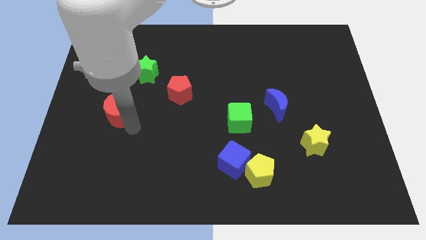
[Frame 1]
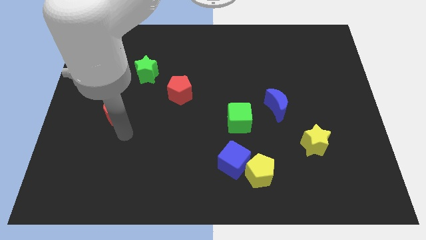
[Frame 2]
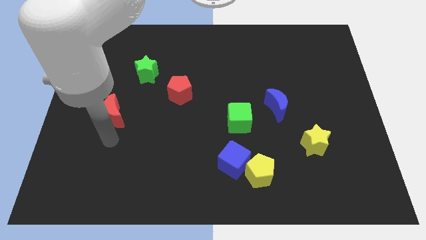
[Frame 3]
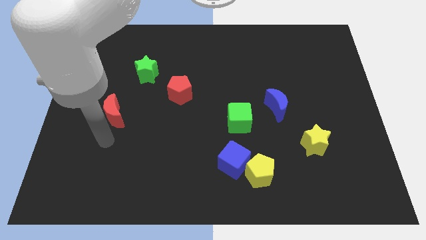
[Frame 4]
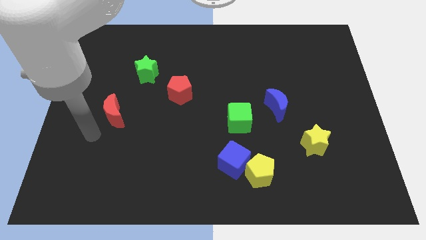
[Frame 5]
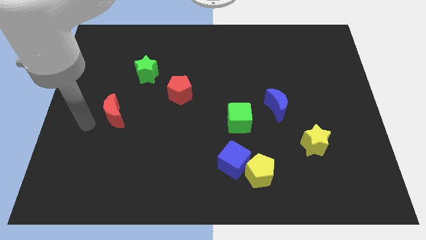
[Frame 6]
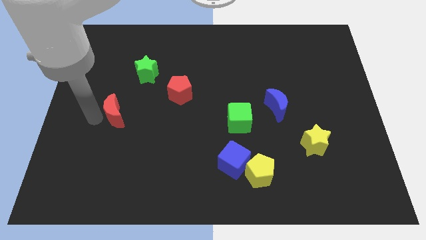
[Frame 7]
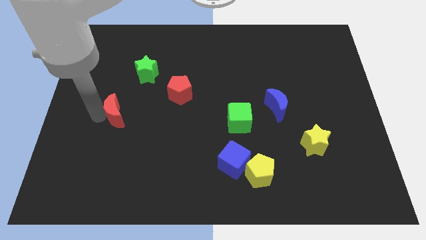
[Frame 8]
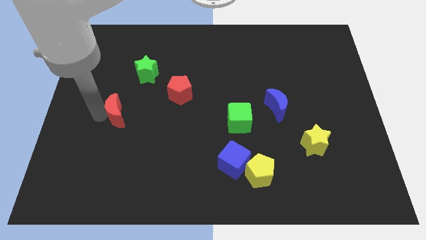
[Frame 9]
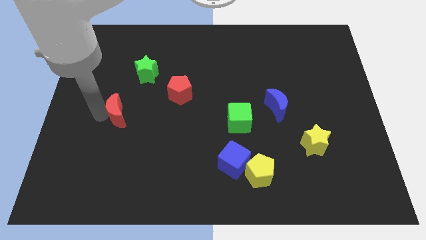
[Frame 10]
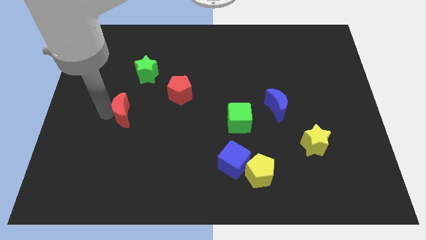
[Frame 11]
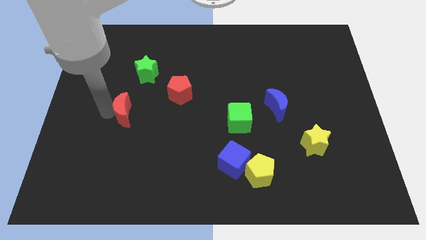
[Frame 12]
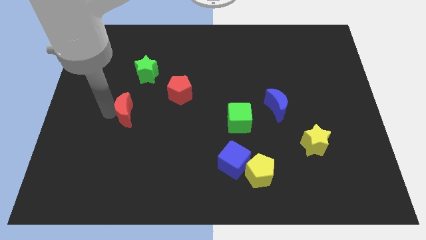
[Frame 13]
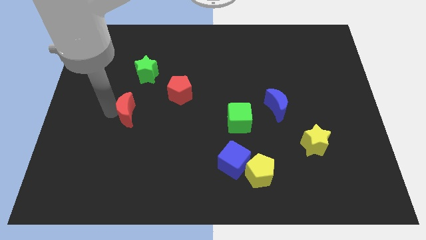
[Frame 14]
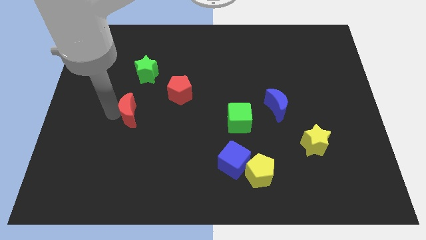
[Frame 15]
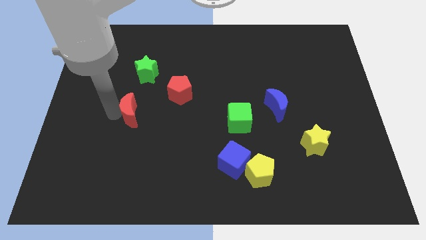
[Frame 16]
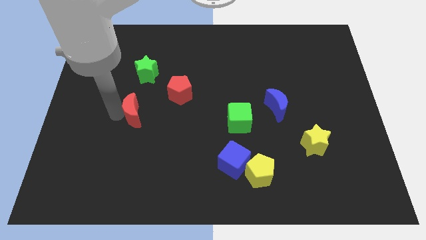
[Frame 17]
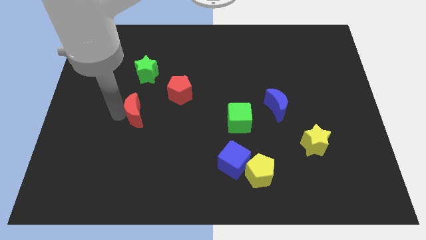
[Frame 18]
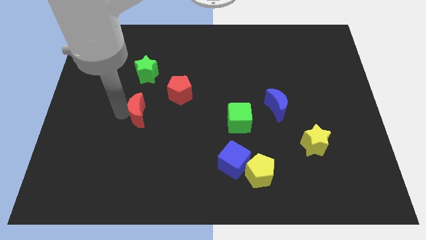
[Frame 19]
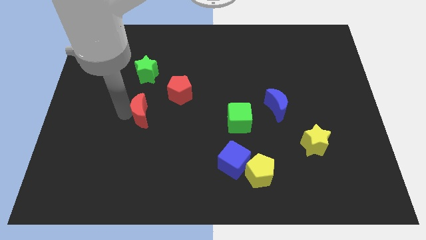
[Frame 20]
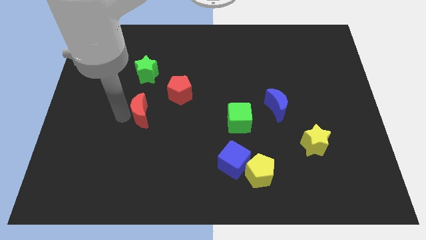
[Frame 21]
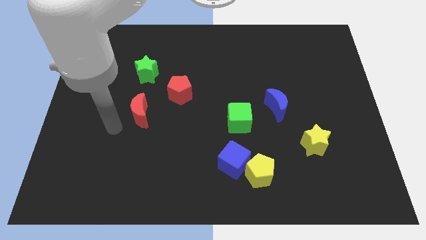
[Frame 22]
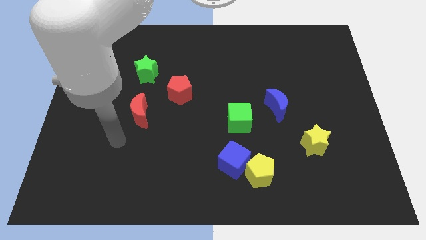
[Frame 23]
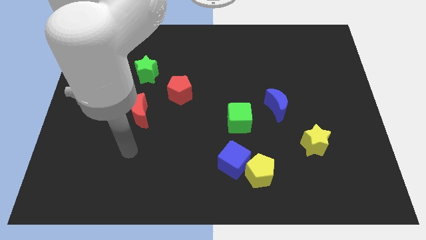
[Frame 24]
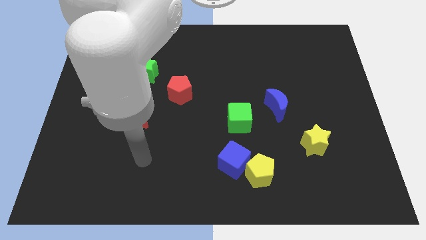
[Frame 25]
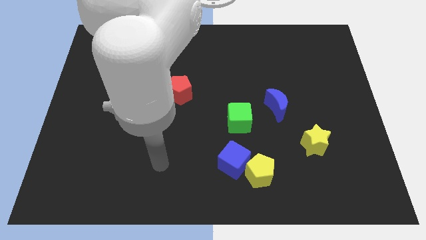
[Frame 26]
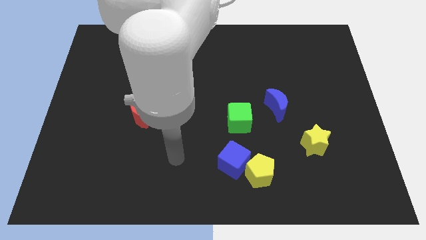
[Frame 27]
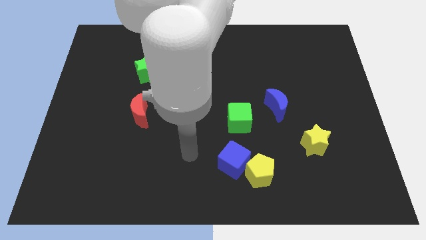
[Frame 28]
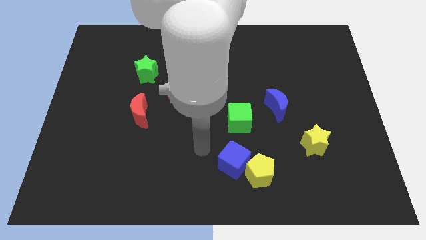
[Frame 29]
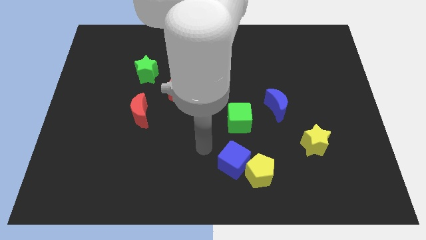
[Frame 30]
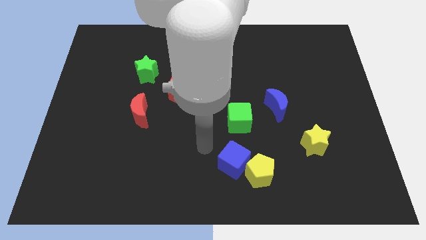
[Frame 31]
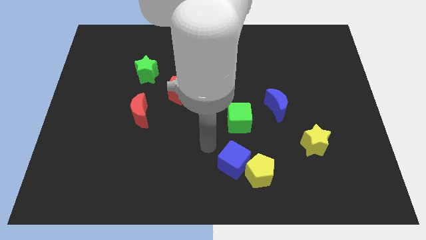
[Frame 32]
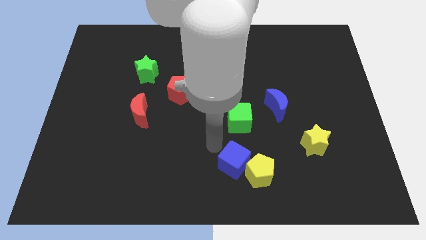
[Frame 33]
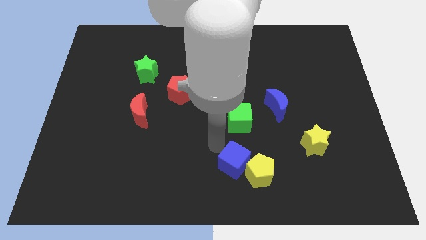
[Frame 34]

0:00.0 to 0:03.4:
push the red moon below the green star

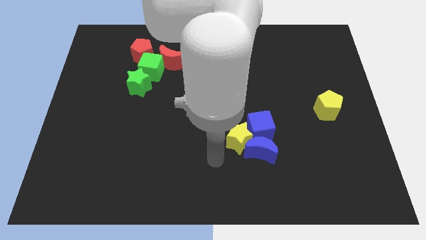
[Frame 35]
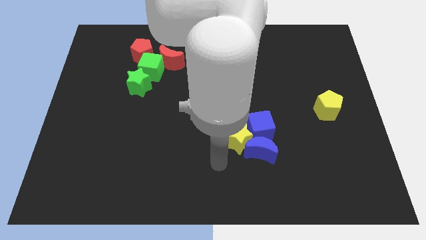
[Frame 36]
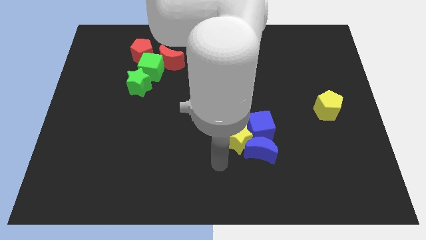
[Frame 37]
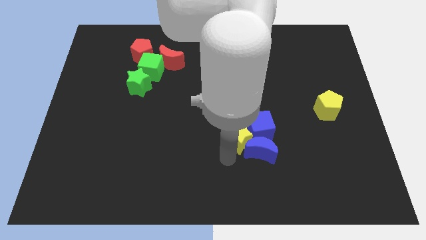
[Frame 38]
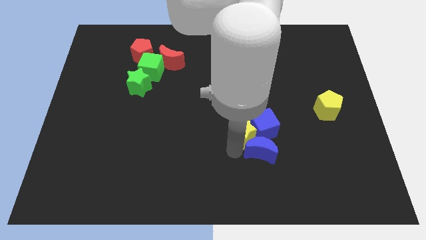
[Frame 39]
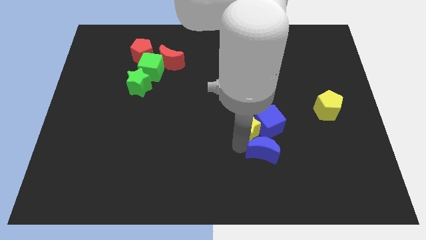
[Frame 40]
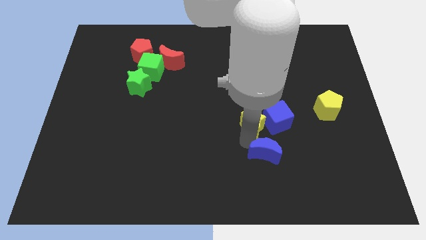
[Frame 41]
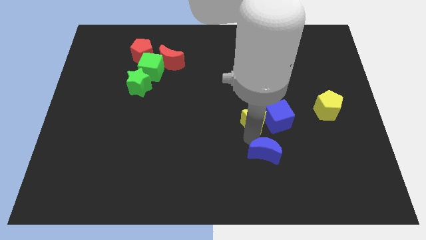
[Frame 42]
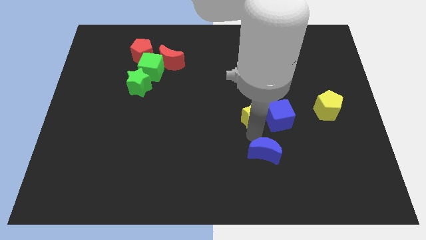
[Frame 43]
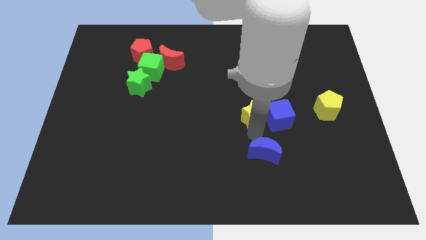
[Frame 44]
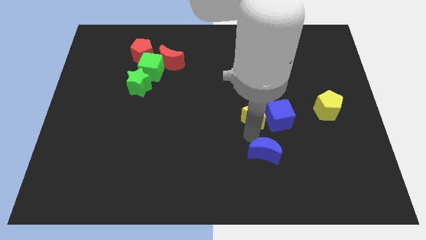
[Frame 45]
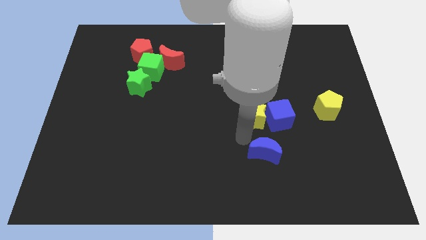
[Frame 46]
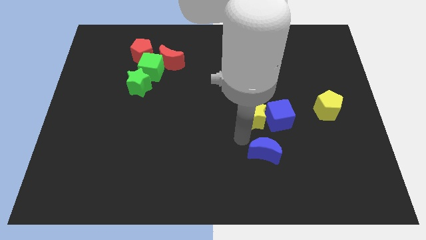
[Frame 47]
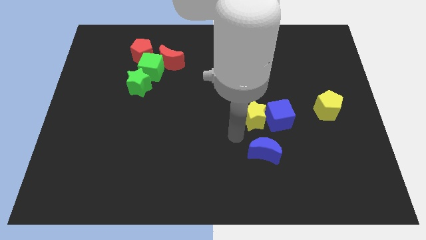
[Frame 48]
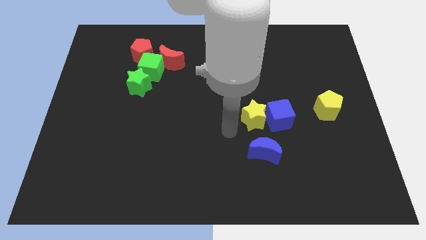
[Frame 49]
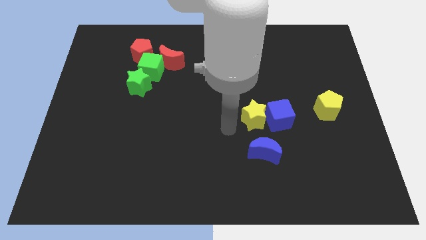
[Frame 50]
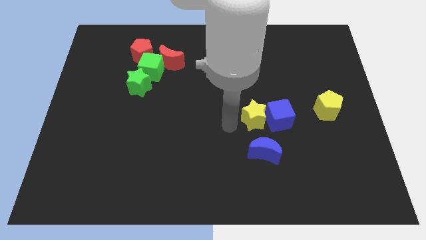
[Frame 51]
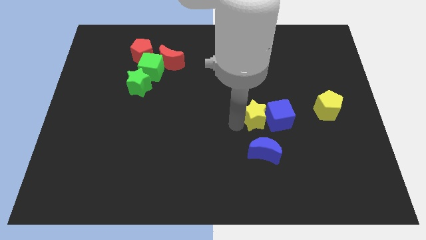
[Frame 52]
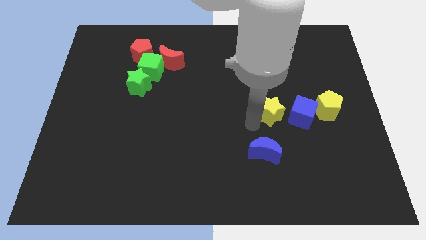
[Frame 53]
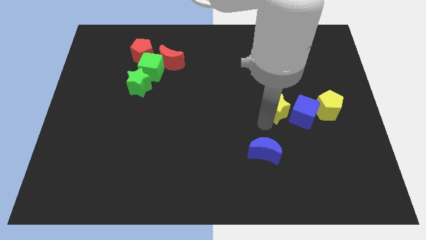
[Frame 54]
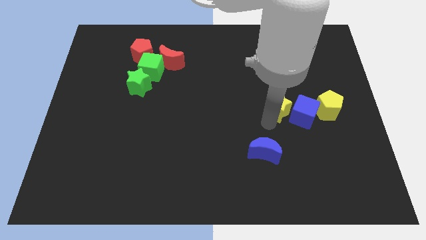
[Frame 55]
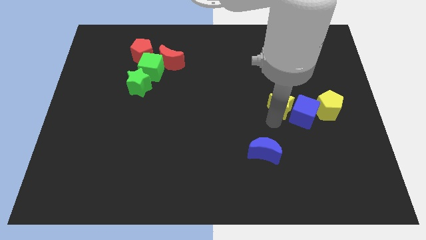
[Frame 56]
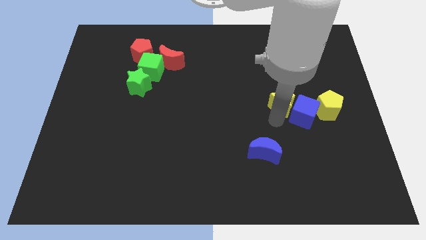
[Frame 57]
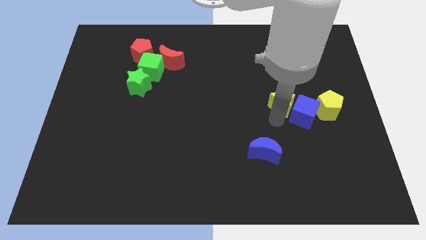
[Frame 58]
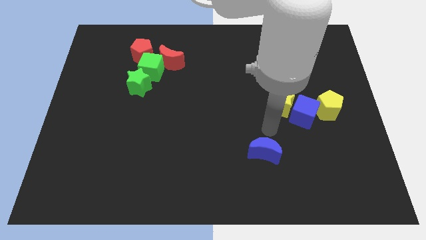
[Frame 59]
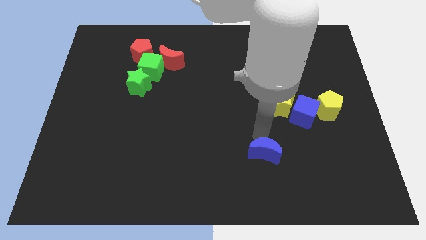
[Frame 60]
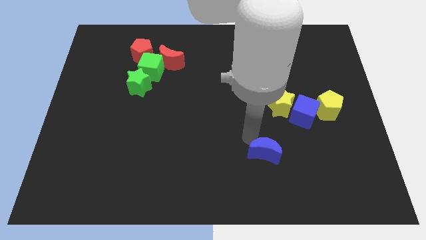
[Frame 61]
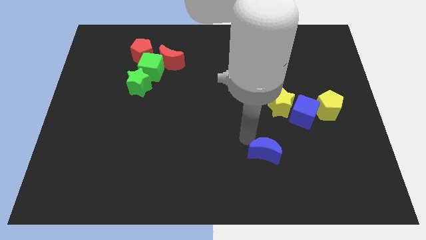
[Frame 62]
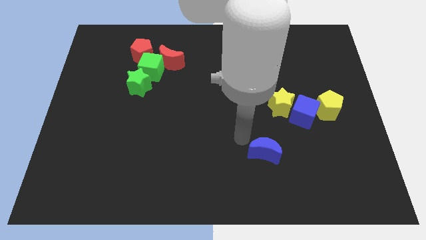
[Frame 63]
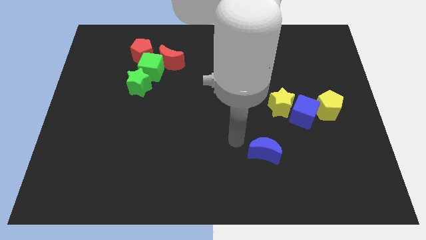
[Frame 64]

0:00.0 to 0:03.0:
move the blue cube in between the yellow blocks

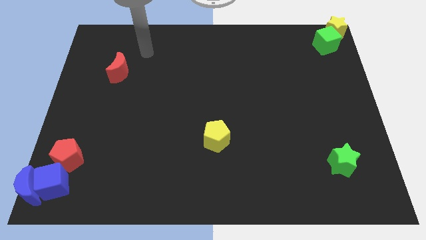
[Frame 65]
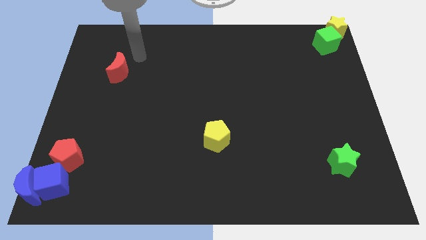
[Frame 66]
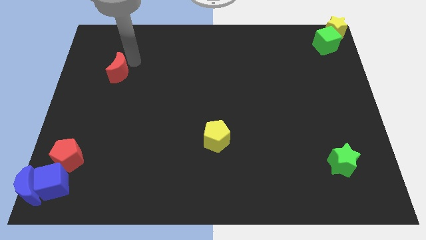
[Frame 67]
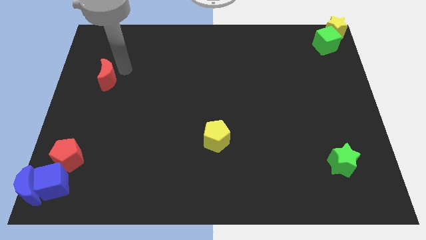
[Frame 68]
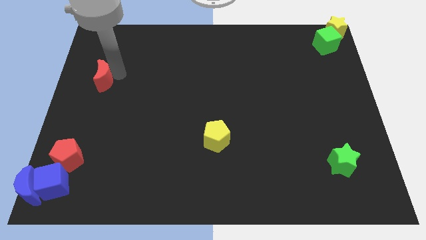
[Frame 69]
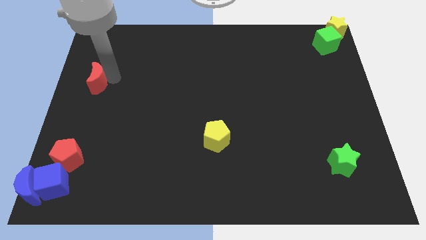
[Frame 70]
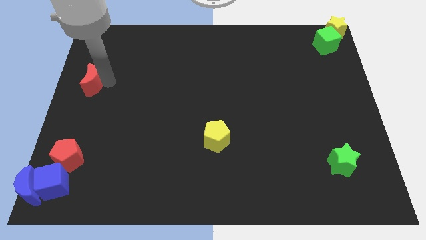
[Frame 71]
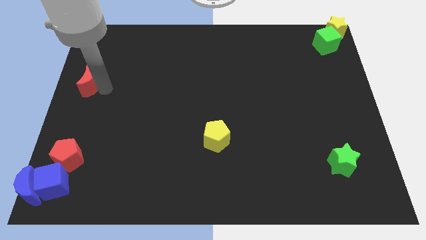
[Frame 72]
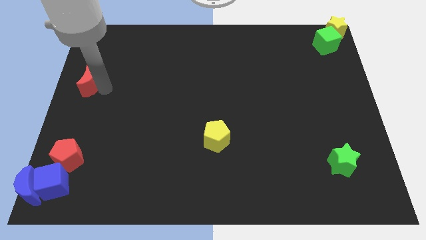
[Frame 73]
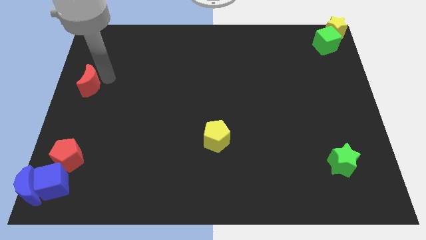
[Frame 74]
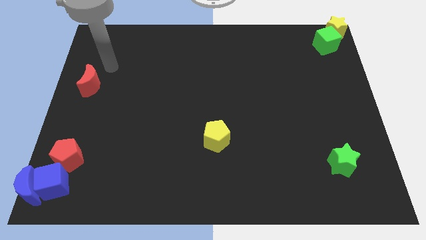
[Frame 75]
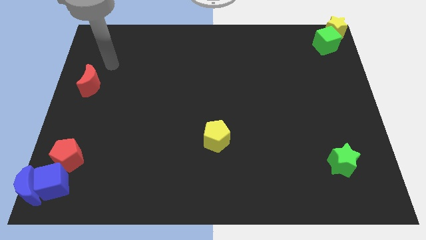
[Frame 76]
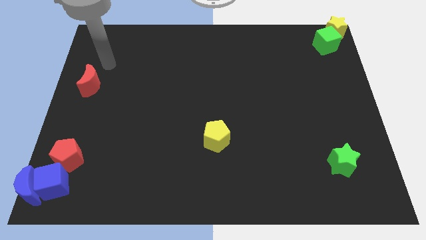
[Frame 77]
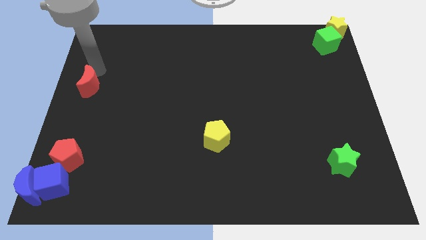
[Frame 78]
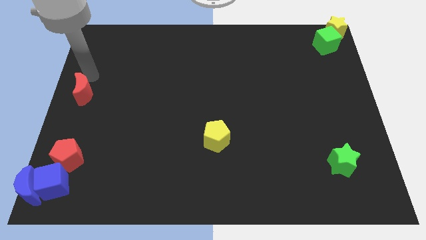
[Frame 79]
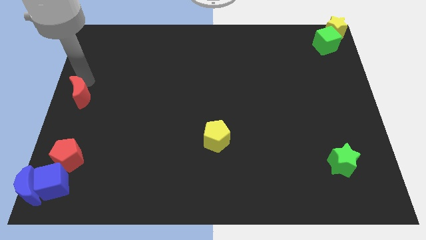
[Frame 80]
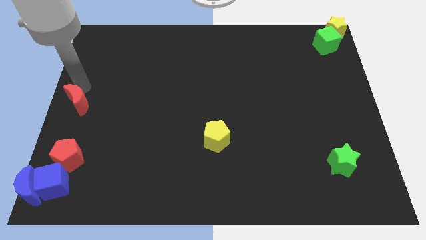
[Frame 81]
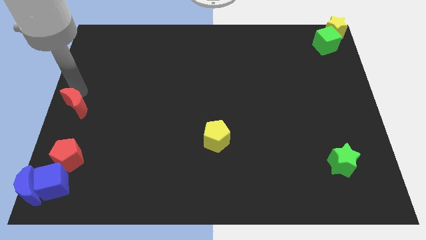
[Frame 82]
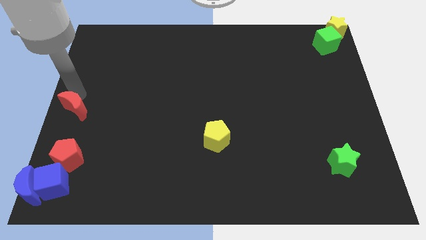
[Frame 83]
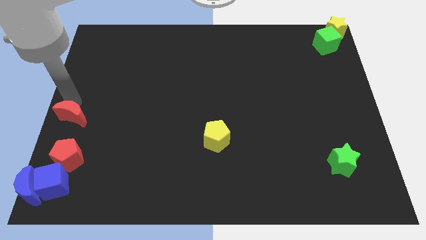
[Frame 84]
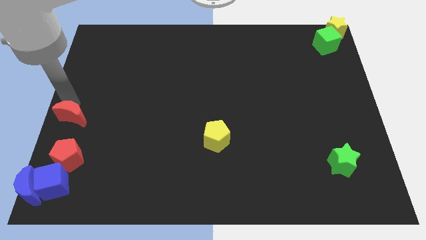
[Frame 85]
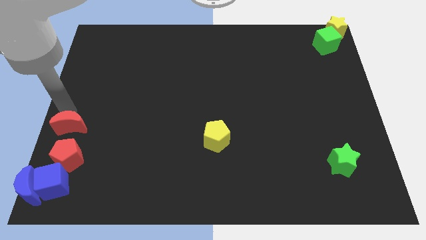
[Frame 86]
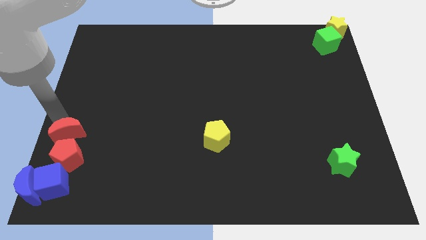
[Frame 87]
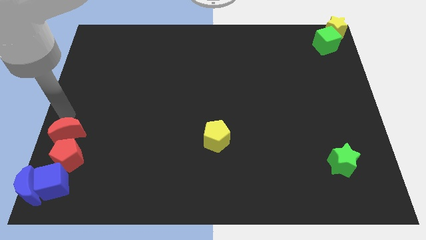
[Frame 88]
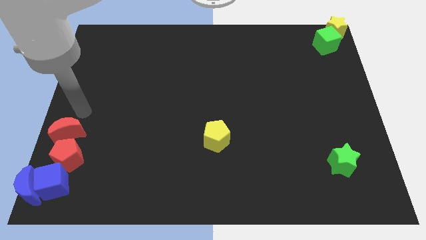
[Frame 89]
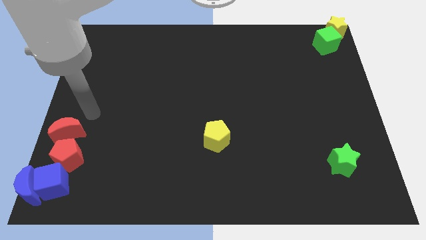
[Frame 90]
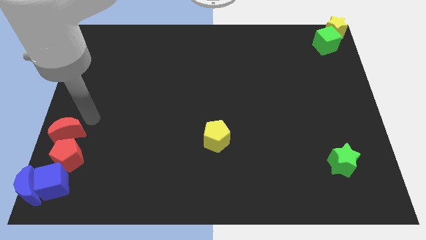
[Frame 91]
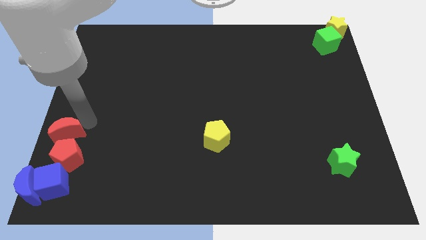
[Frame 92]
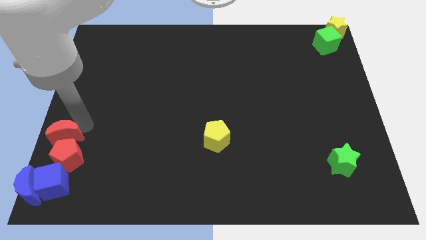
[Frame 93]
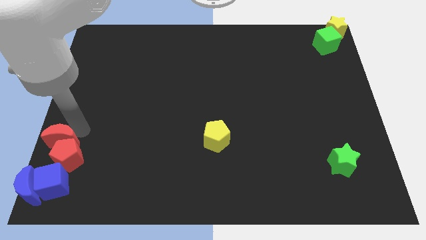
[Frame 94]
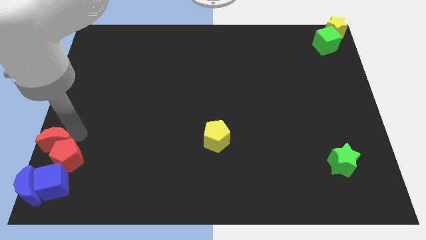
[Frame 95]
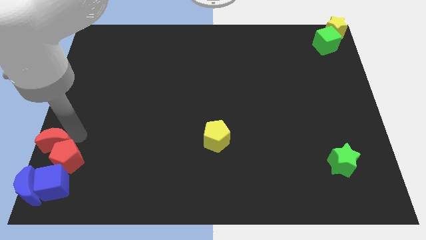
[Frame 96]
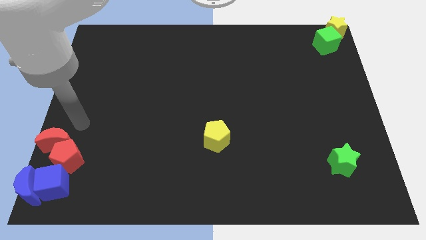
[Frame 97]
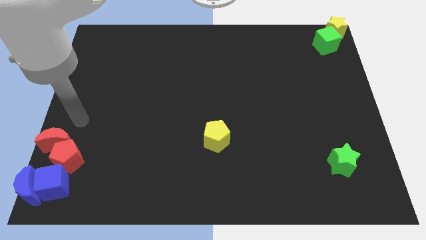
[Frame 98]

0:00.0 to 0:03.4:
push the red crescent into red pentagon
